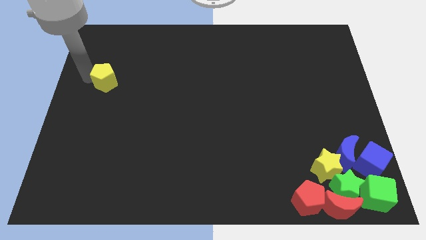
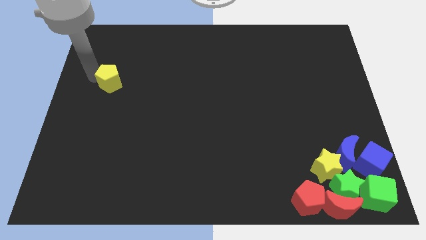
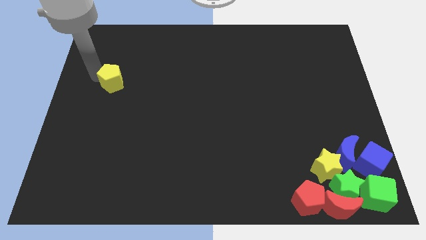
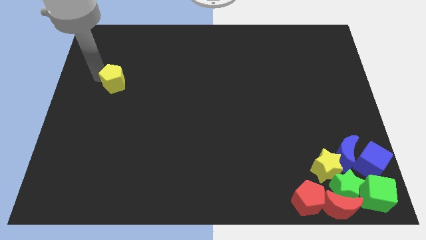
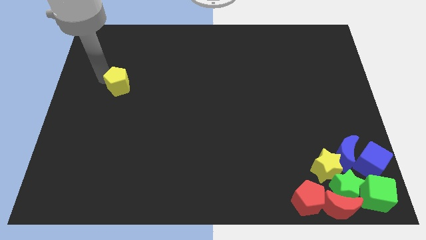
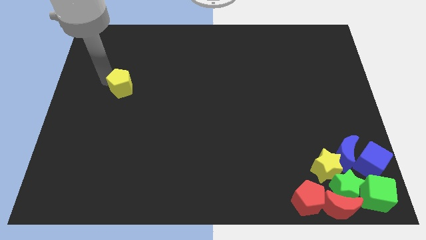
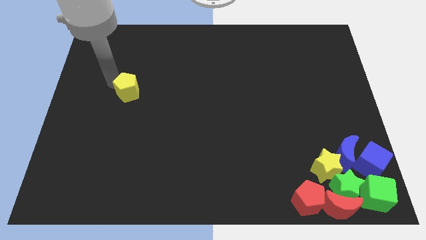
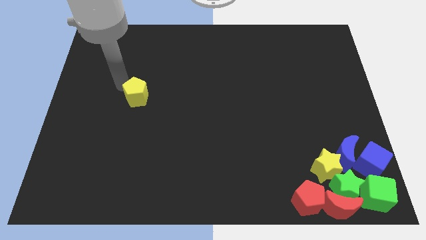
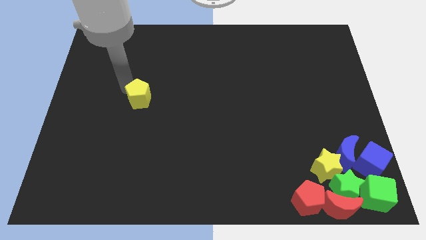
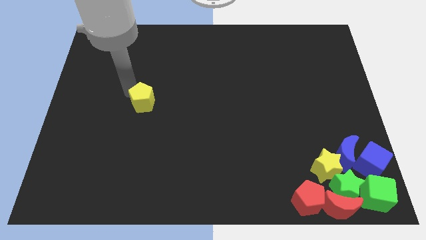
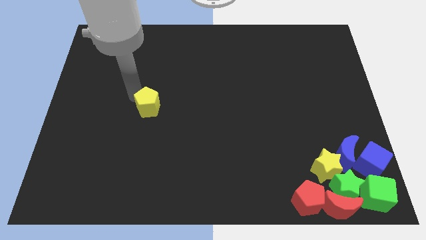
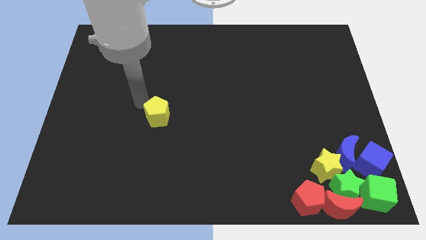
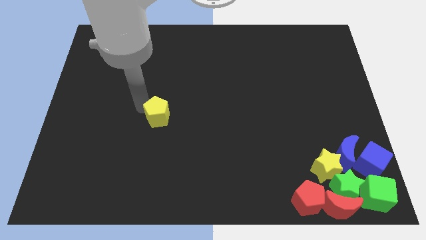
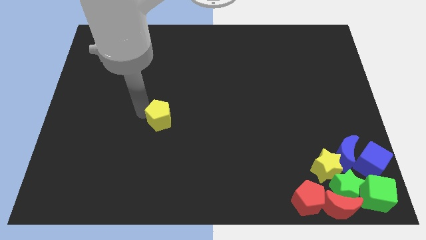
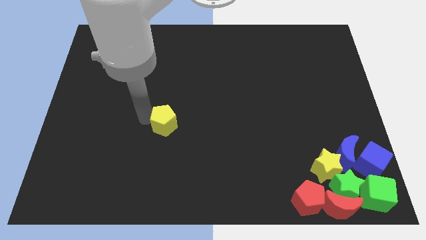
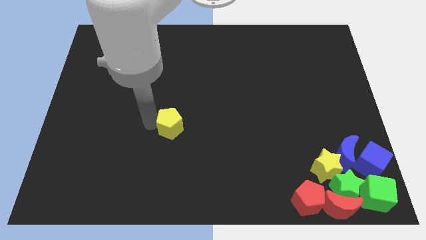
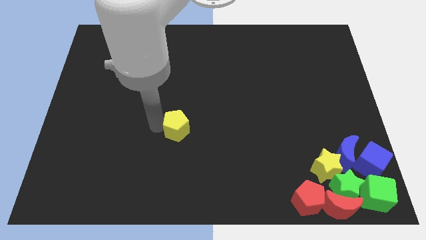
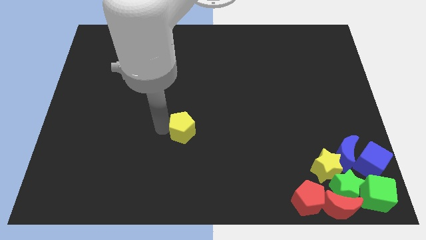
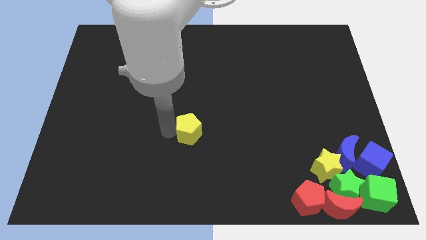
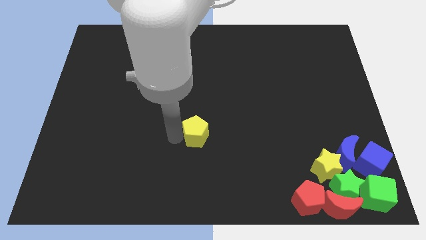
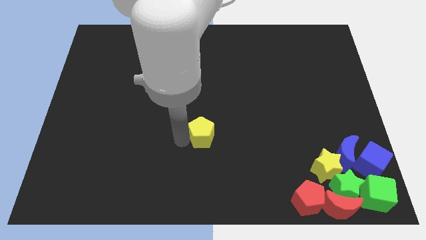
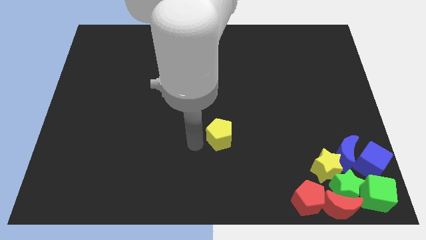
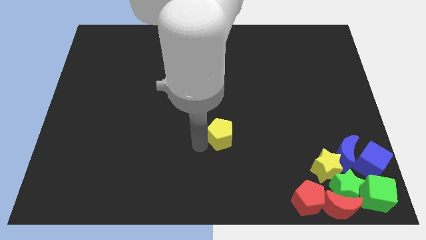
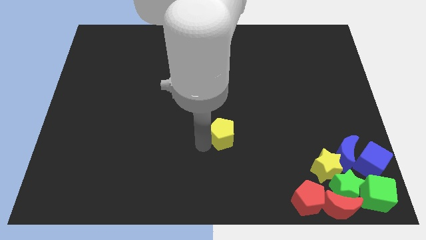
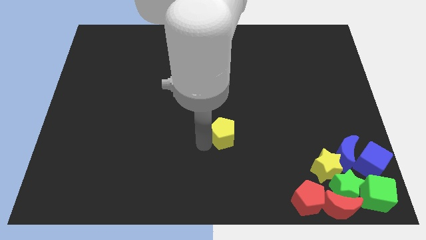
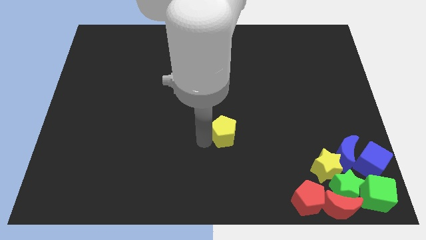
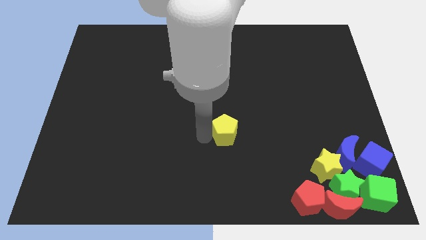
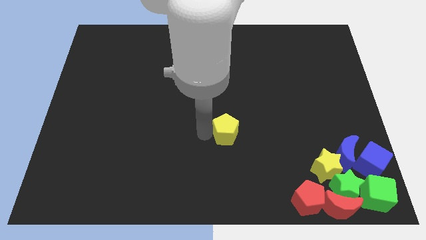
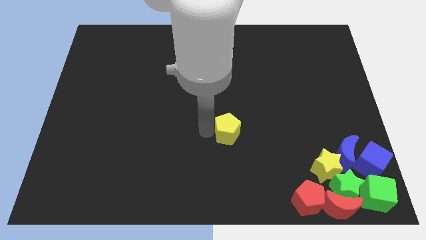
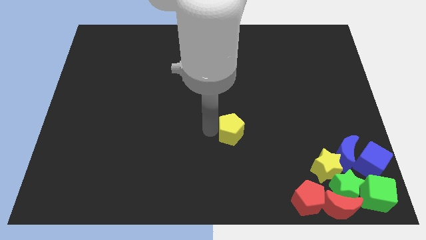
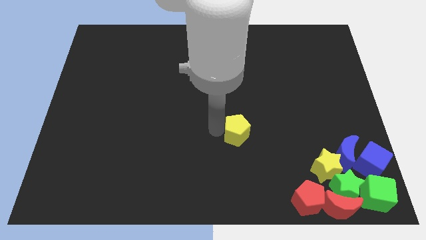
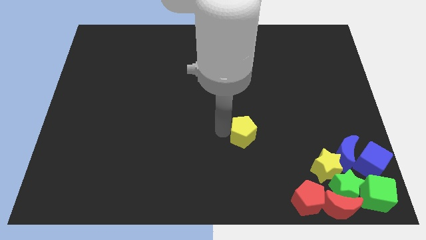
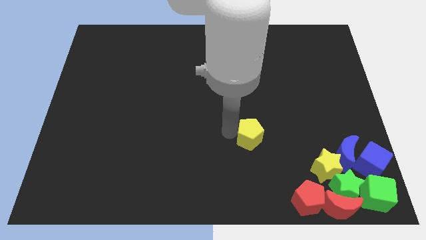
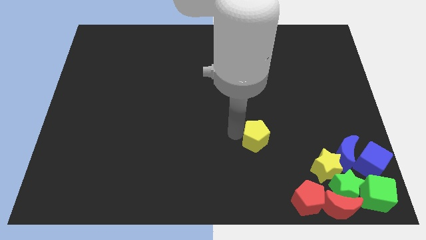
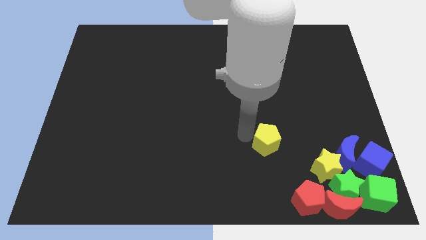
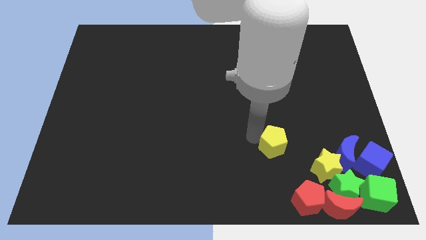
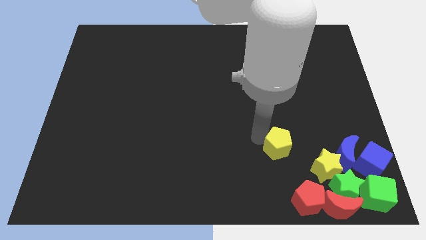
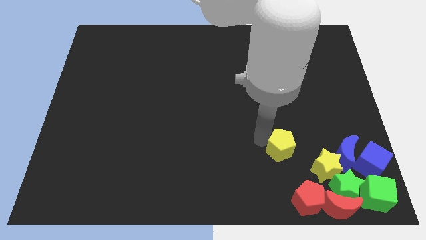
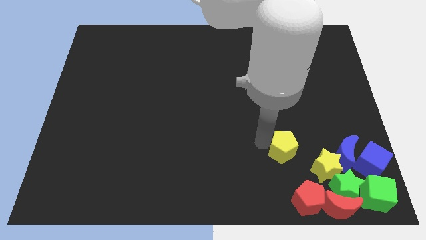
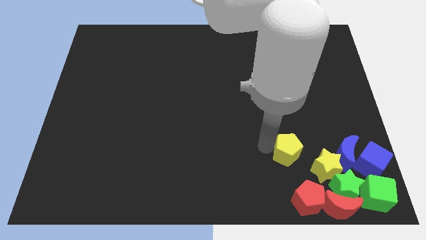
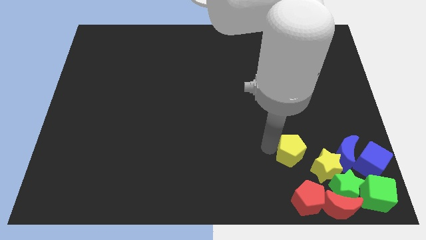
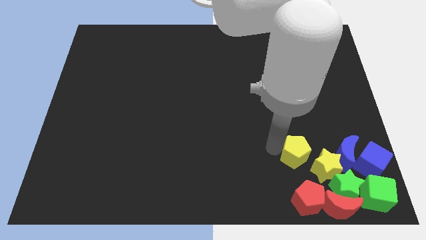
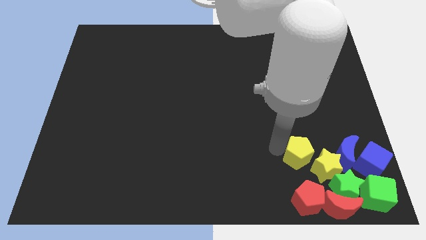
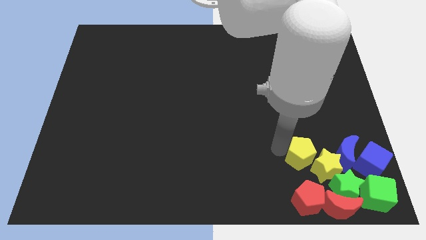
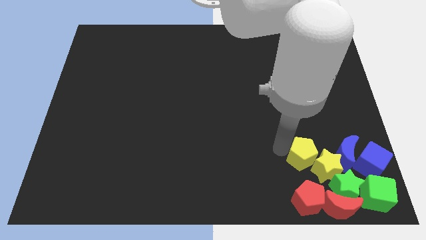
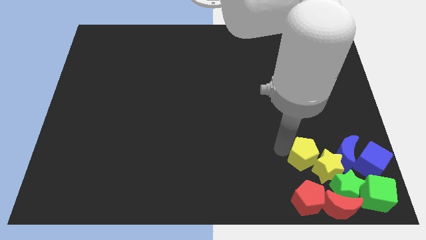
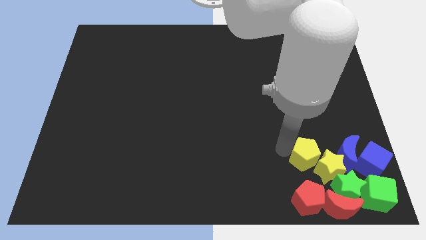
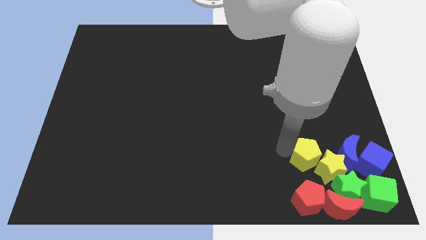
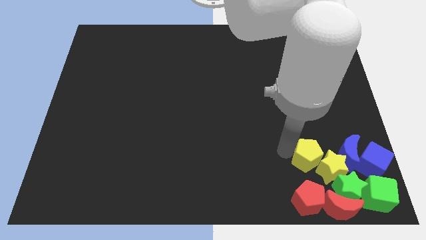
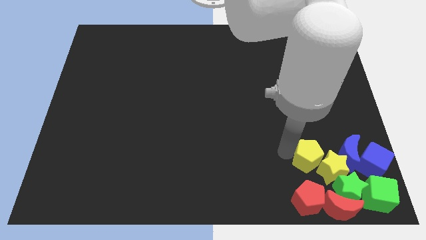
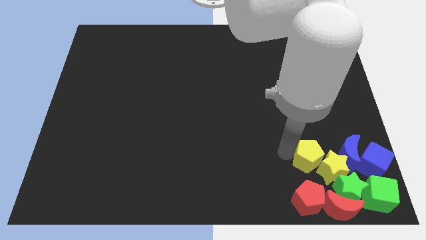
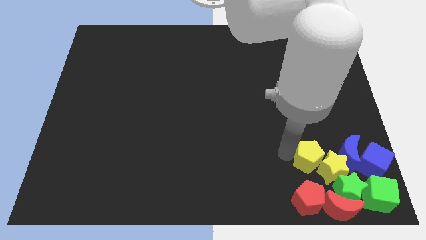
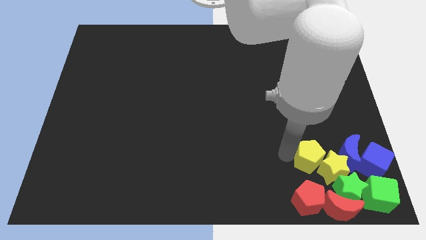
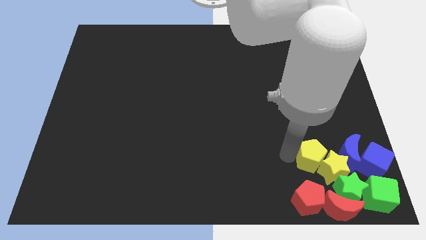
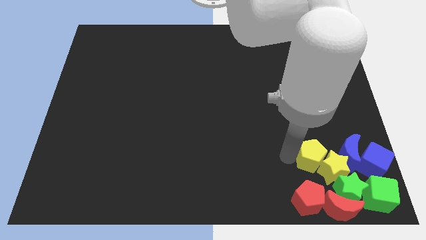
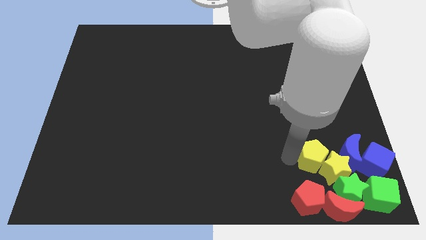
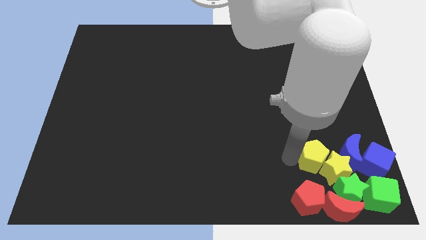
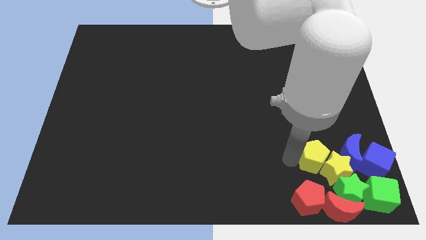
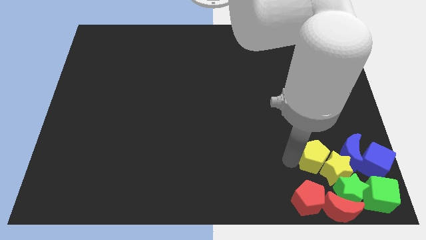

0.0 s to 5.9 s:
push the yellow pentagon top left to the yellow star

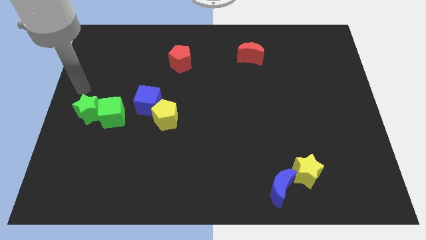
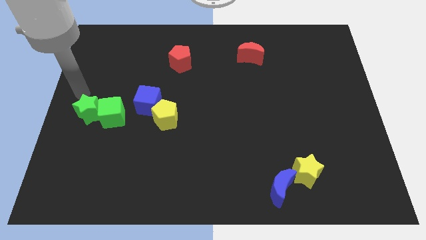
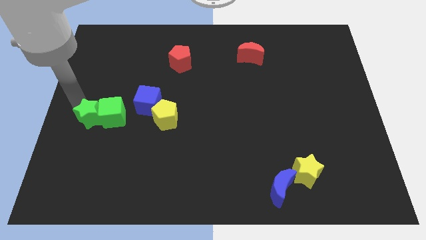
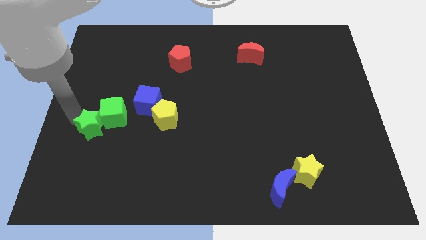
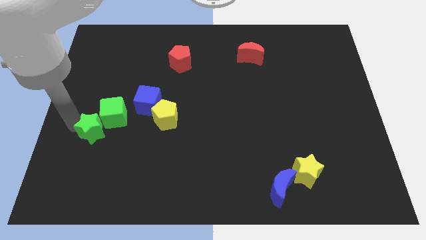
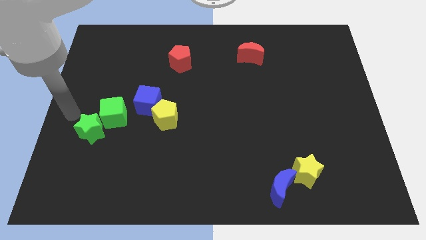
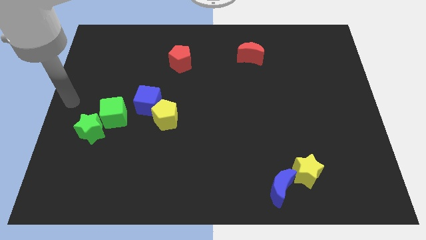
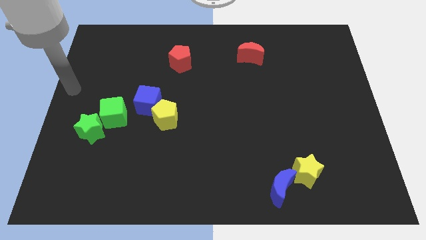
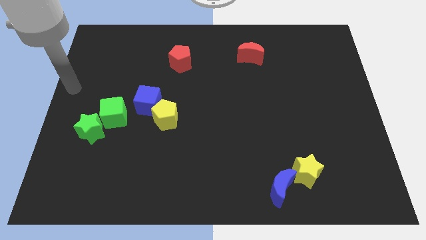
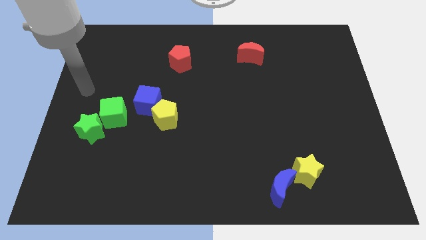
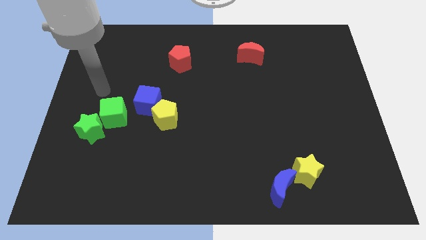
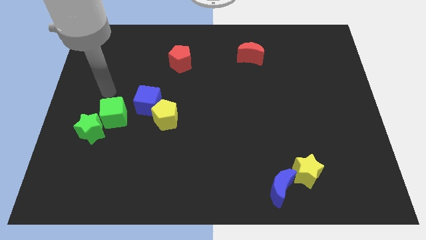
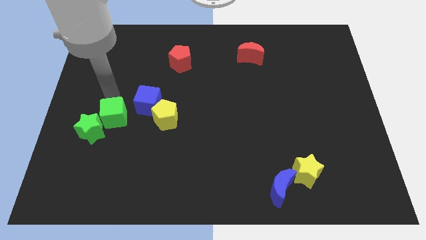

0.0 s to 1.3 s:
push the green cube slightly to the bottom

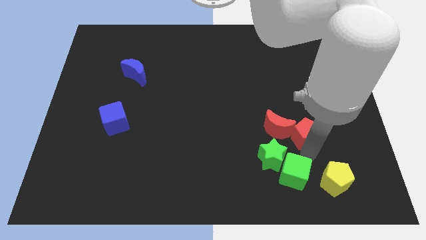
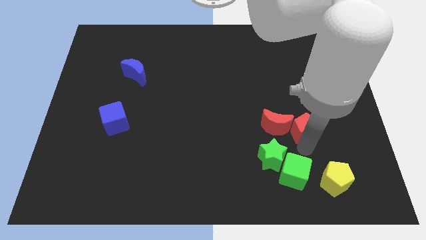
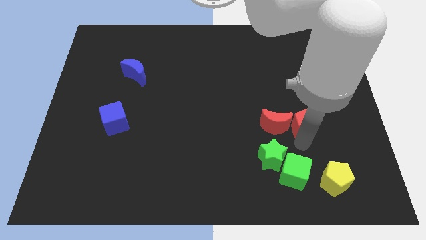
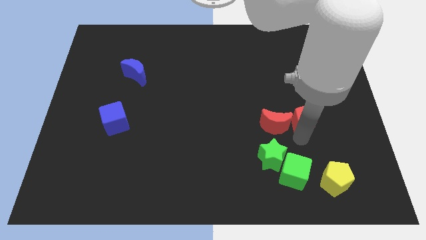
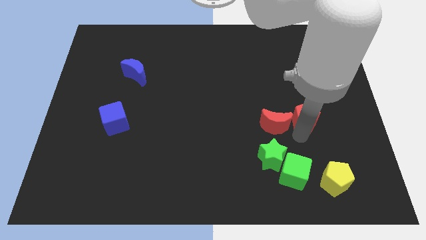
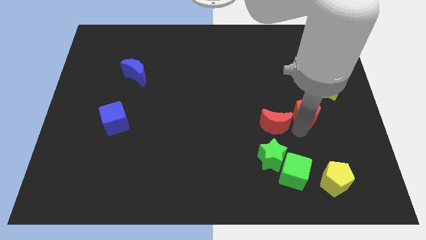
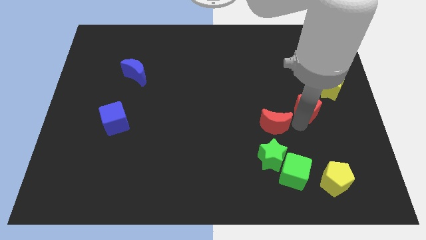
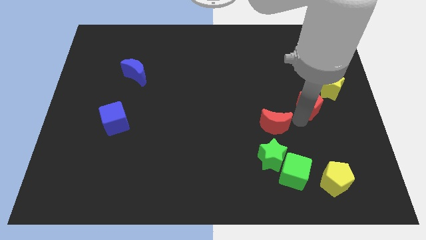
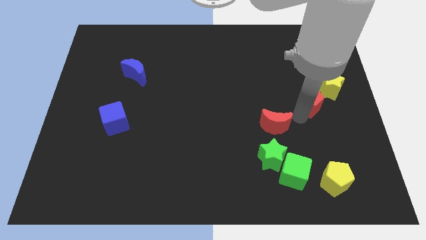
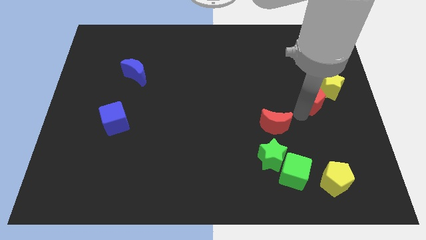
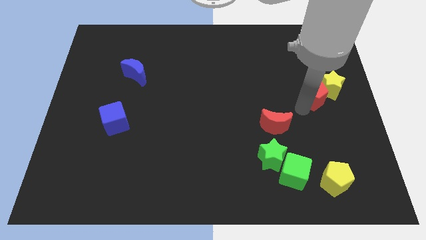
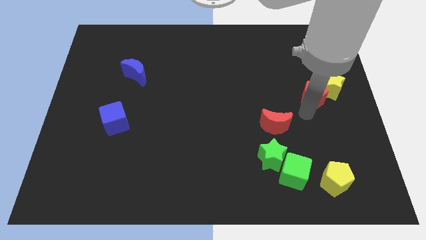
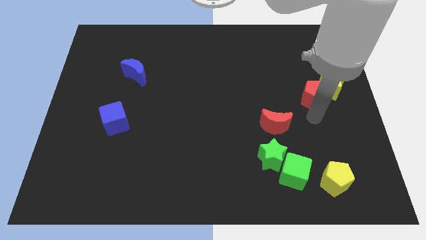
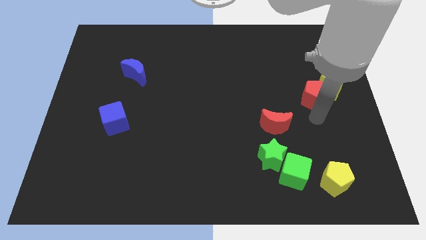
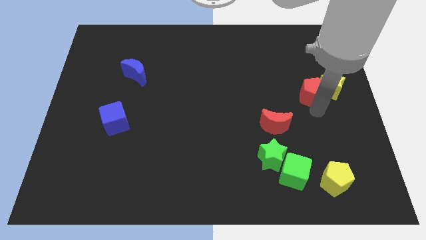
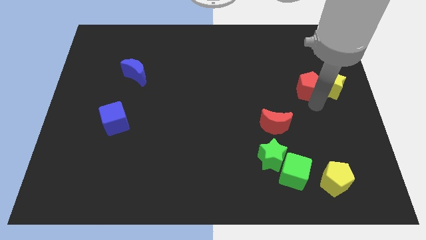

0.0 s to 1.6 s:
place red pentagon to the left of the yellow star

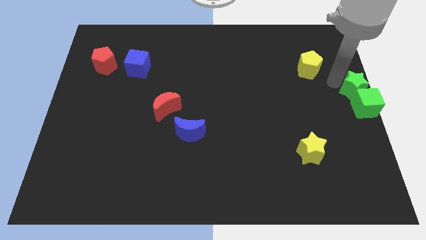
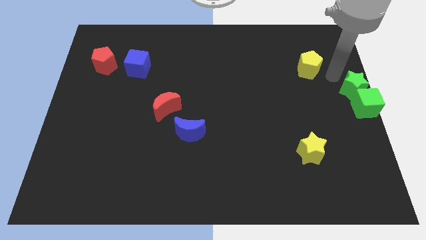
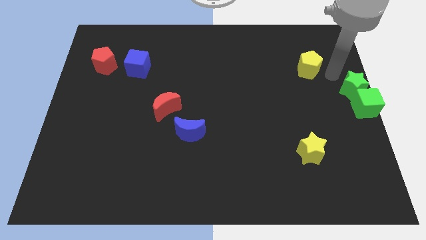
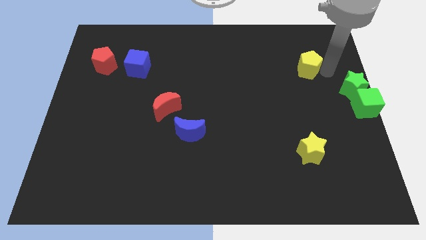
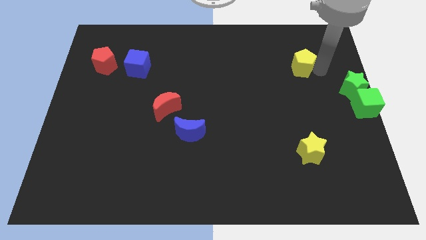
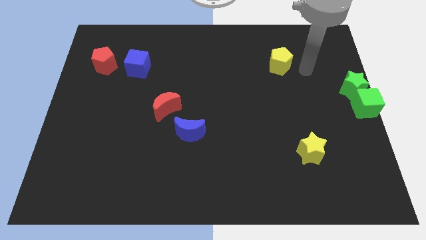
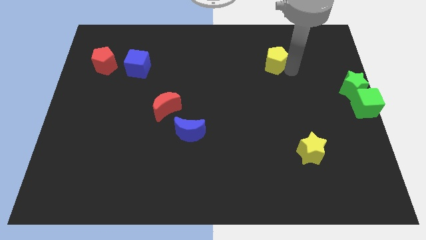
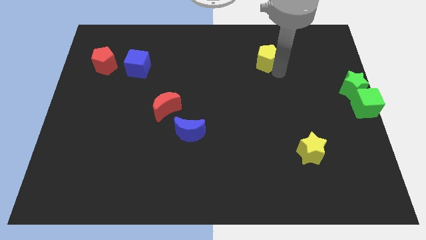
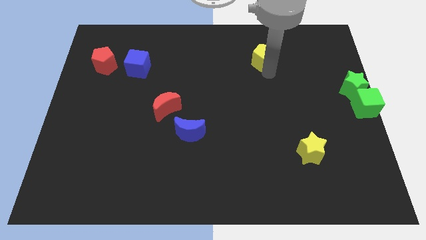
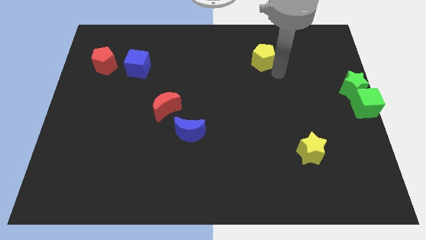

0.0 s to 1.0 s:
move the yellow pentagon to the left of the board
